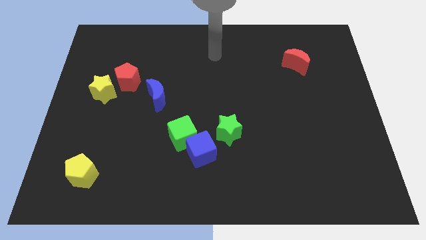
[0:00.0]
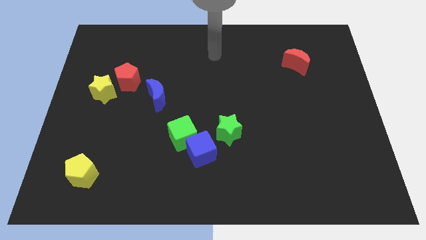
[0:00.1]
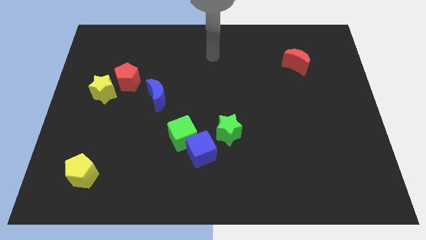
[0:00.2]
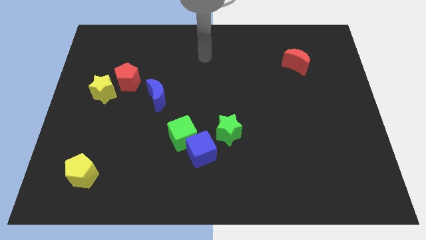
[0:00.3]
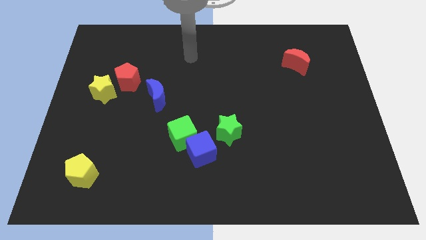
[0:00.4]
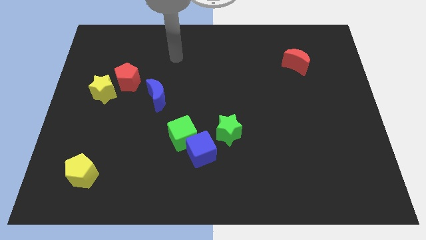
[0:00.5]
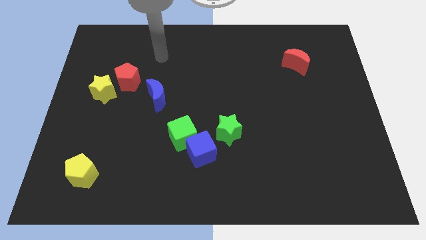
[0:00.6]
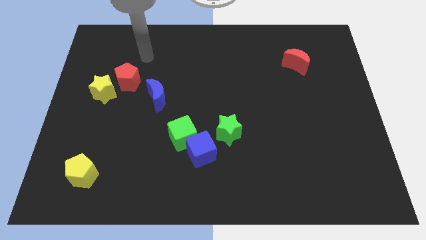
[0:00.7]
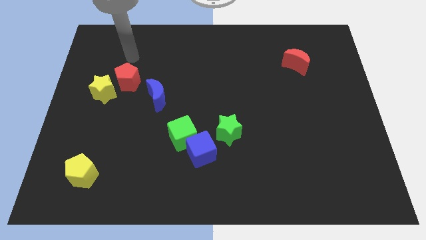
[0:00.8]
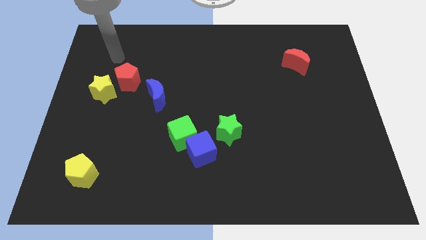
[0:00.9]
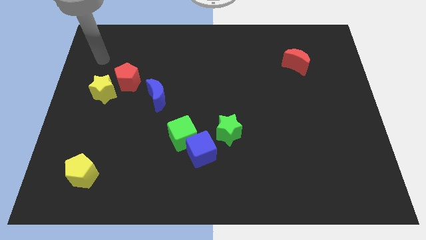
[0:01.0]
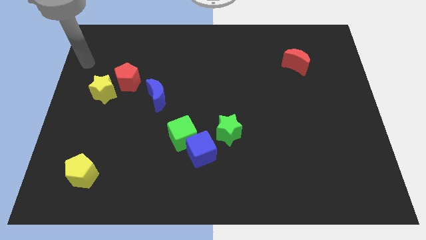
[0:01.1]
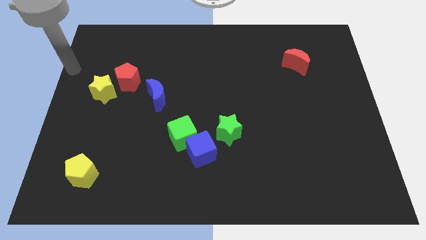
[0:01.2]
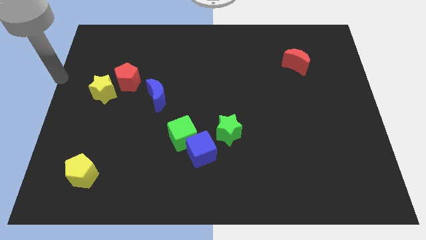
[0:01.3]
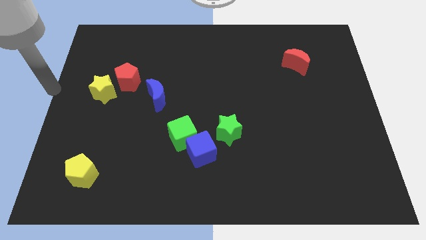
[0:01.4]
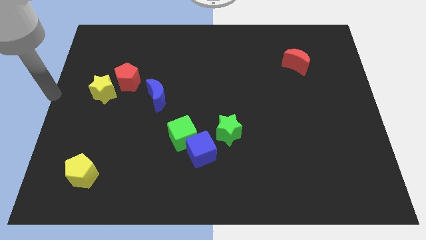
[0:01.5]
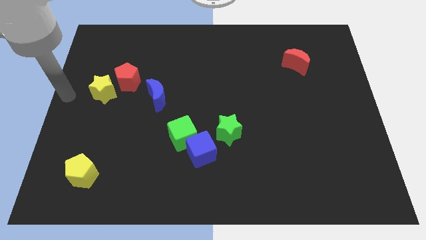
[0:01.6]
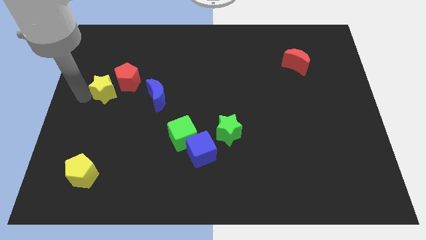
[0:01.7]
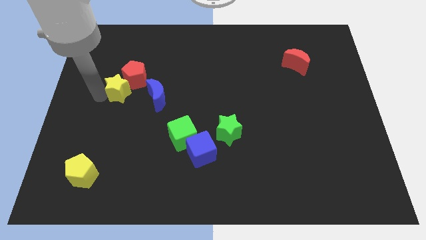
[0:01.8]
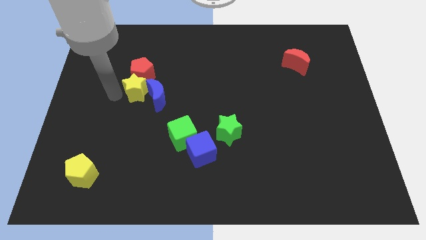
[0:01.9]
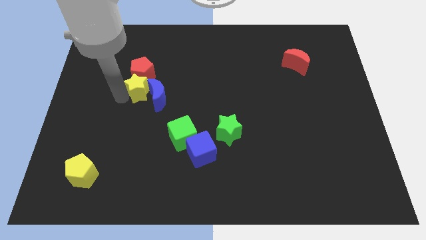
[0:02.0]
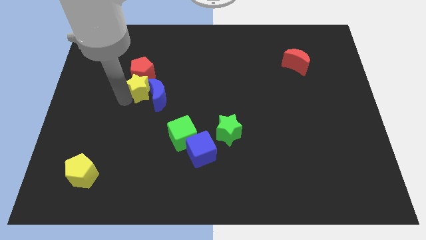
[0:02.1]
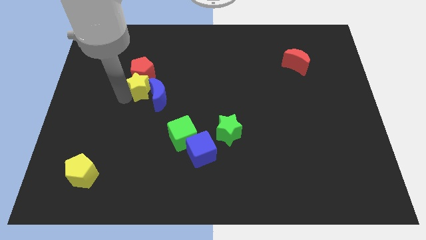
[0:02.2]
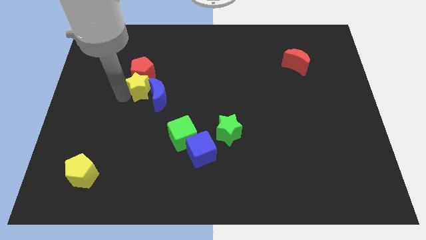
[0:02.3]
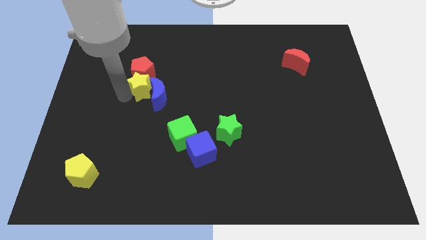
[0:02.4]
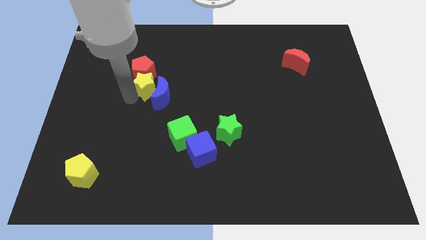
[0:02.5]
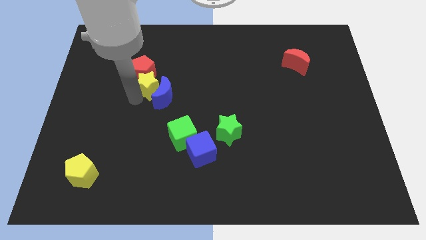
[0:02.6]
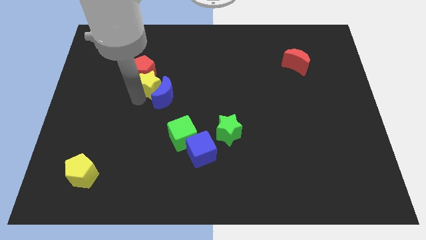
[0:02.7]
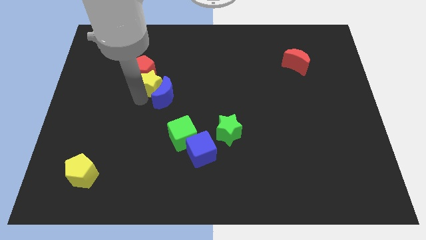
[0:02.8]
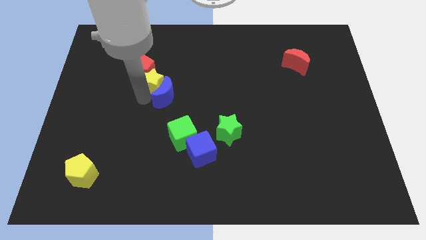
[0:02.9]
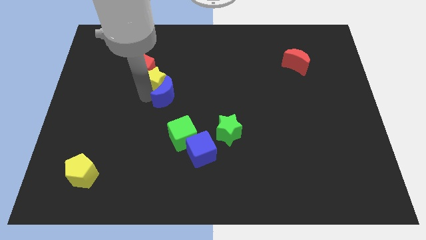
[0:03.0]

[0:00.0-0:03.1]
push the yellow star into the blue crescent

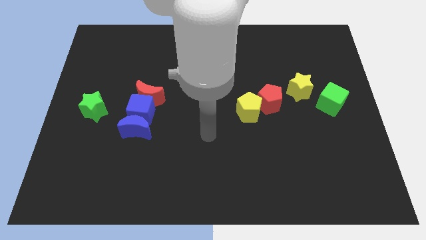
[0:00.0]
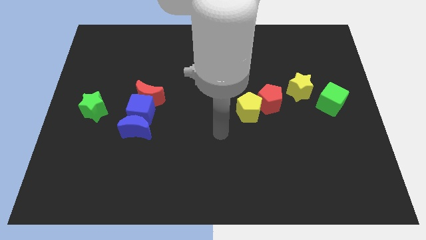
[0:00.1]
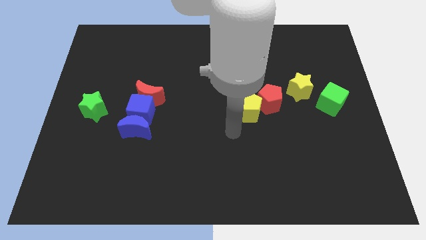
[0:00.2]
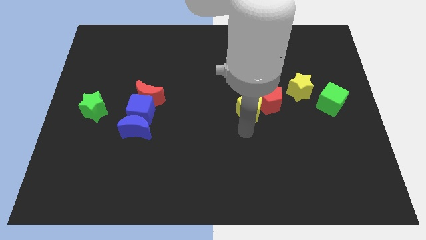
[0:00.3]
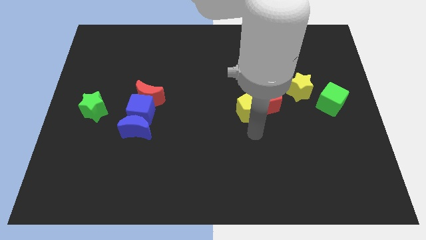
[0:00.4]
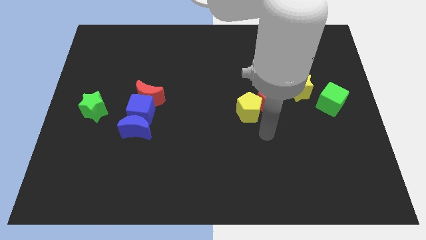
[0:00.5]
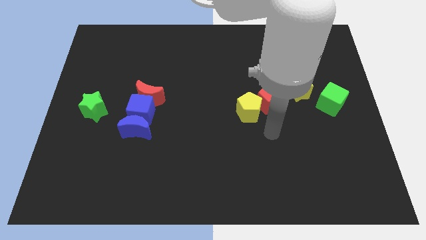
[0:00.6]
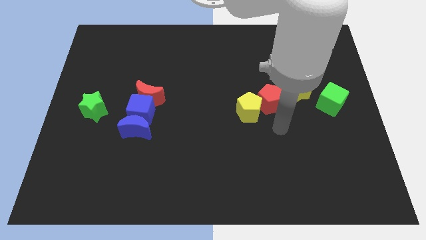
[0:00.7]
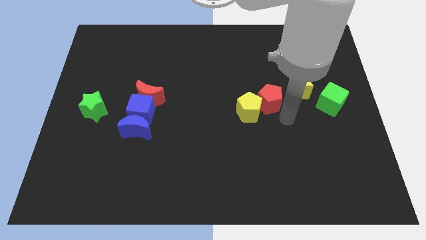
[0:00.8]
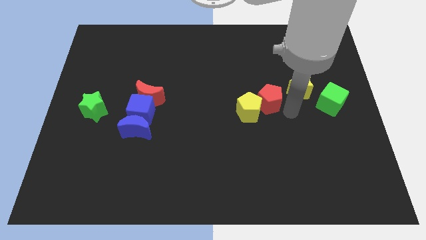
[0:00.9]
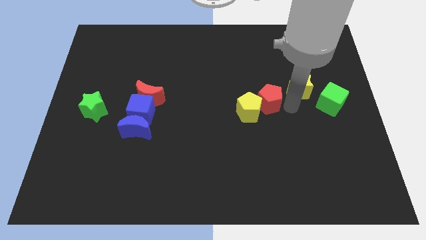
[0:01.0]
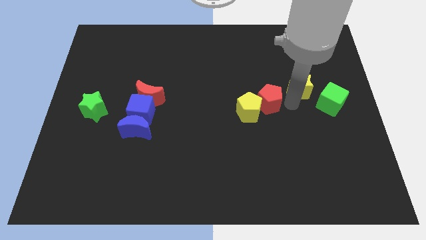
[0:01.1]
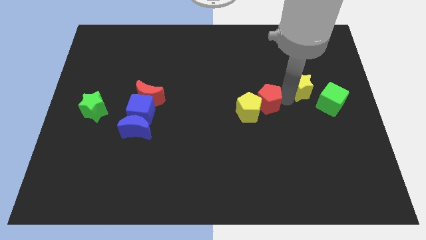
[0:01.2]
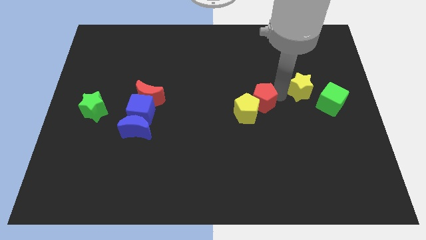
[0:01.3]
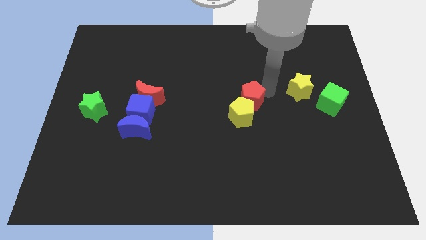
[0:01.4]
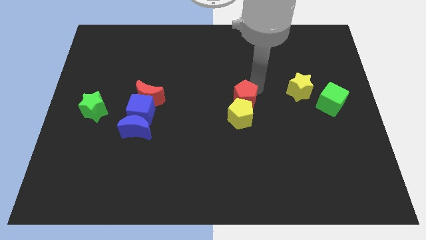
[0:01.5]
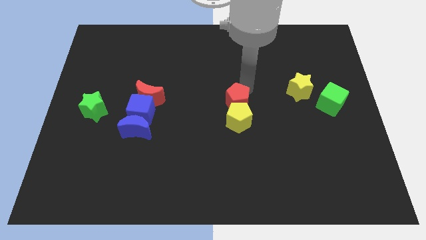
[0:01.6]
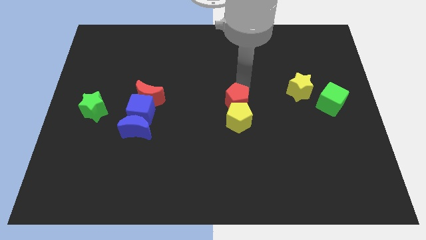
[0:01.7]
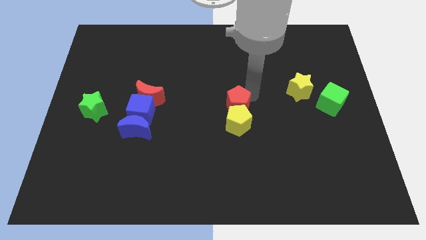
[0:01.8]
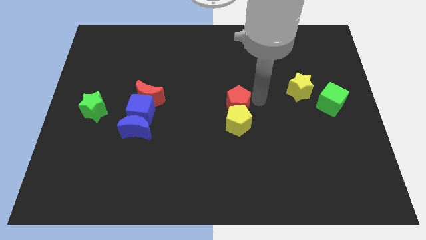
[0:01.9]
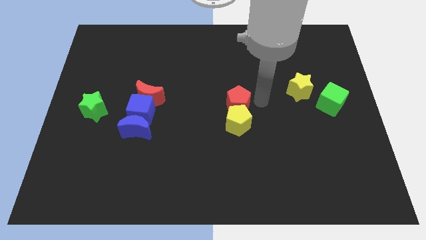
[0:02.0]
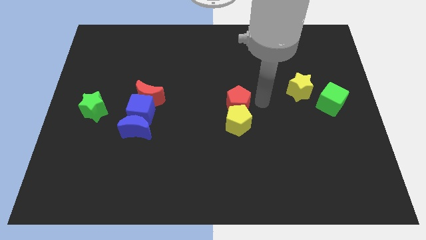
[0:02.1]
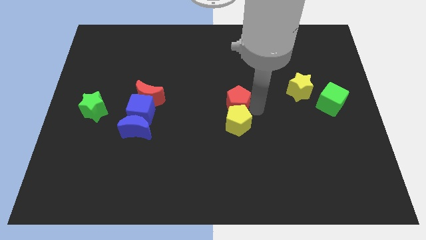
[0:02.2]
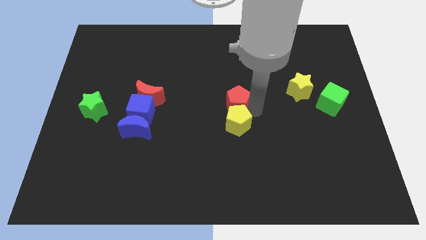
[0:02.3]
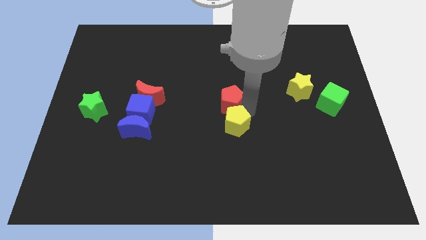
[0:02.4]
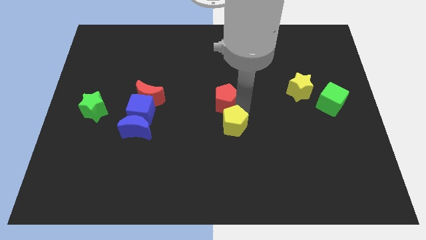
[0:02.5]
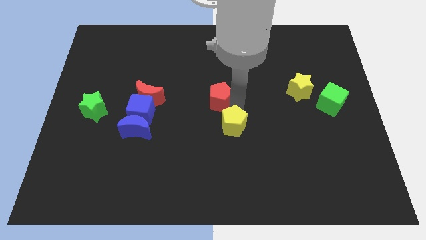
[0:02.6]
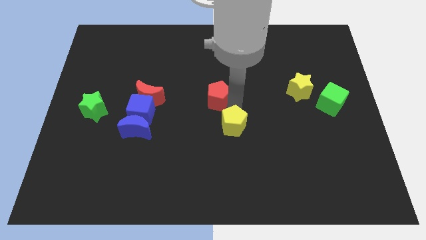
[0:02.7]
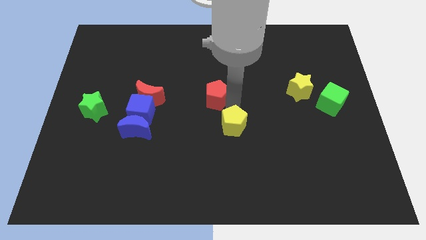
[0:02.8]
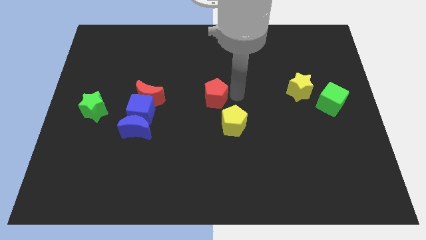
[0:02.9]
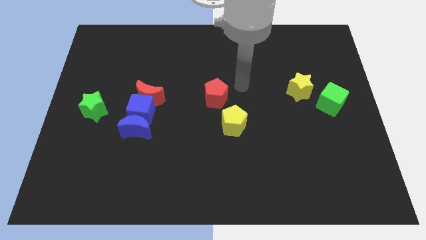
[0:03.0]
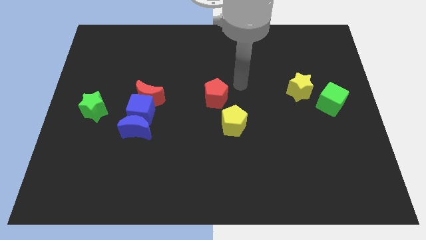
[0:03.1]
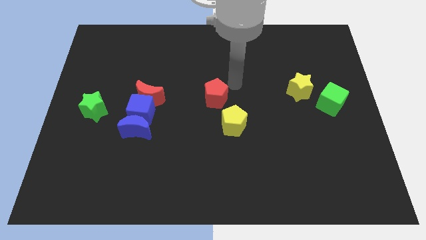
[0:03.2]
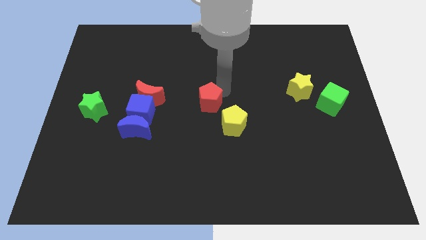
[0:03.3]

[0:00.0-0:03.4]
push the red pentagon parallel to the right of the red crescent

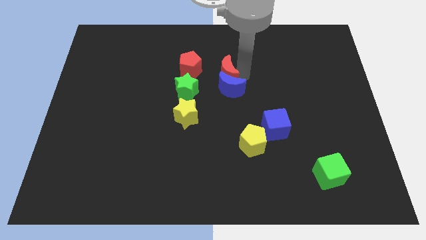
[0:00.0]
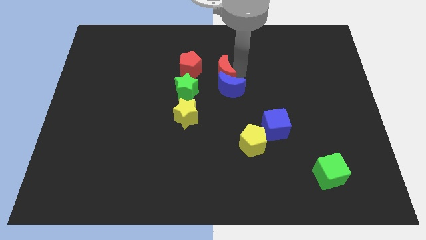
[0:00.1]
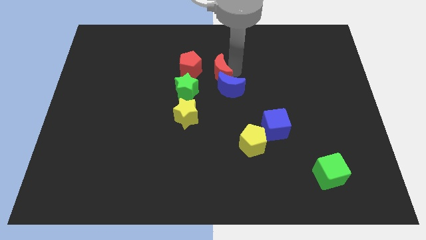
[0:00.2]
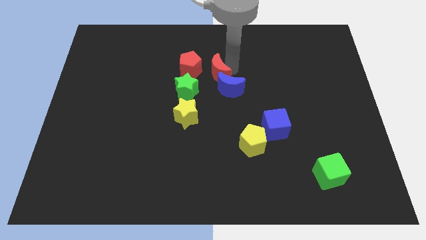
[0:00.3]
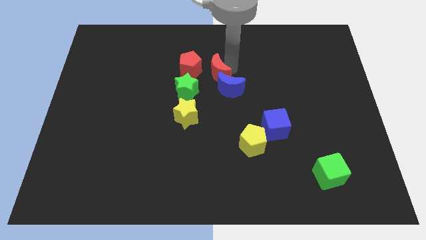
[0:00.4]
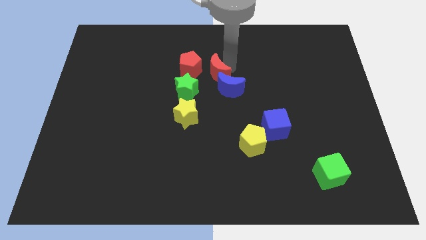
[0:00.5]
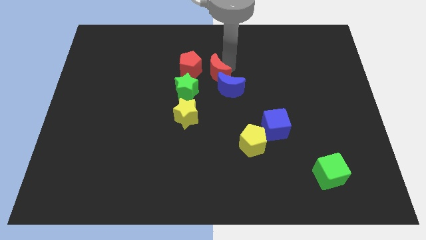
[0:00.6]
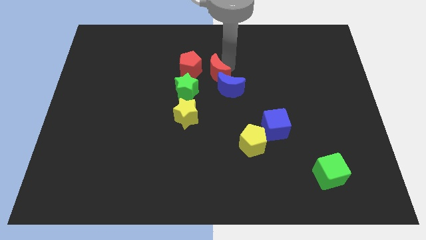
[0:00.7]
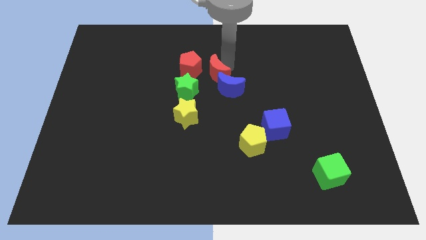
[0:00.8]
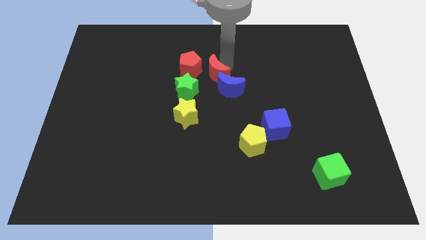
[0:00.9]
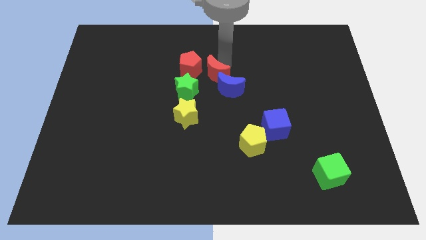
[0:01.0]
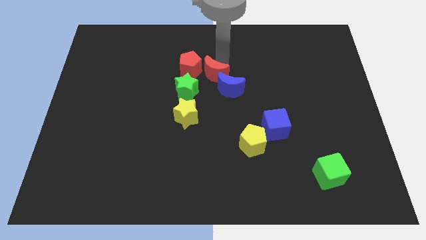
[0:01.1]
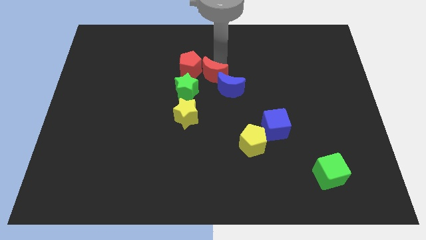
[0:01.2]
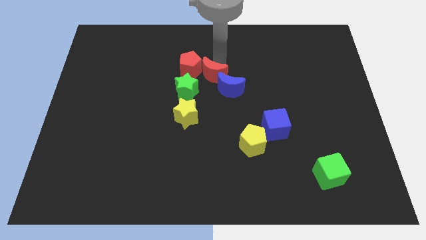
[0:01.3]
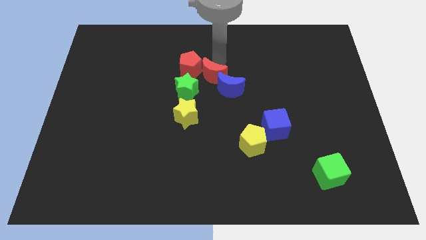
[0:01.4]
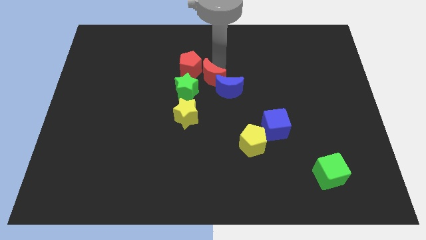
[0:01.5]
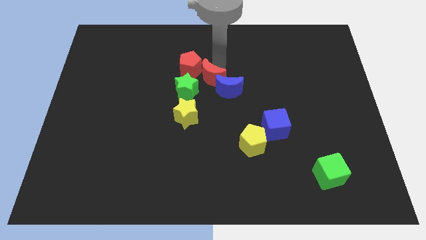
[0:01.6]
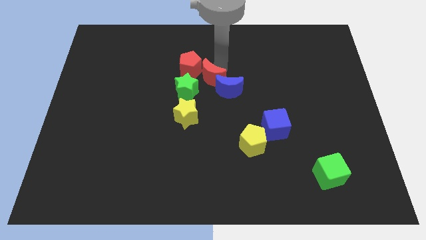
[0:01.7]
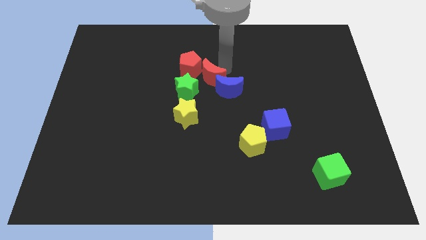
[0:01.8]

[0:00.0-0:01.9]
place the red crescent diagonally in between the blue crescent and the red pentagon

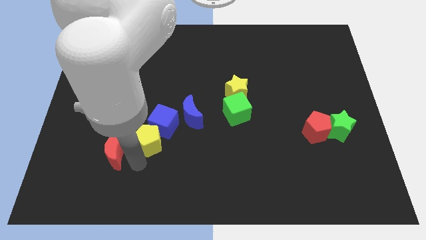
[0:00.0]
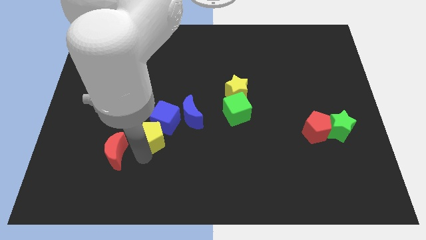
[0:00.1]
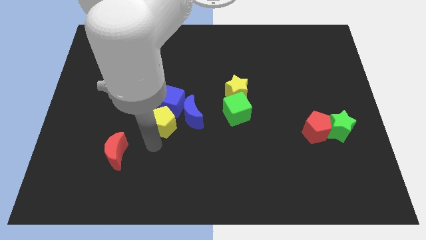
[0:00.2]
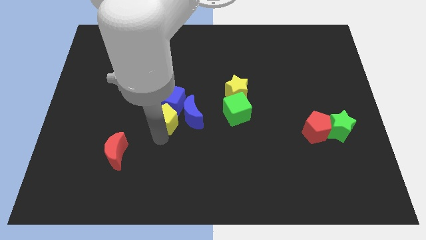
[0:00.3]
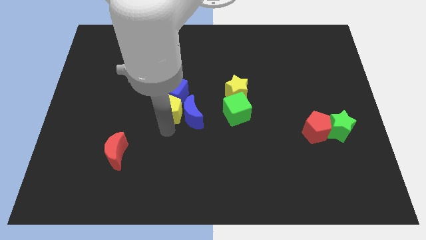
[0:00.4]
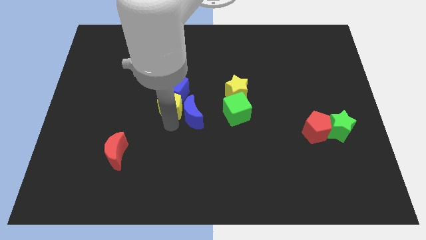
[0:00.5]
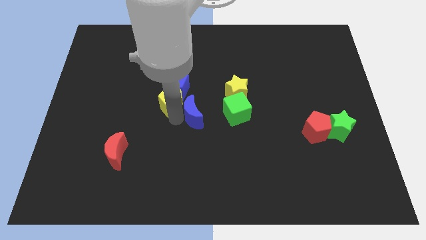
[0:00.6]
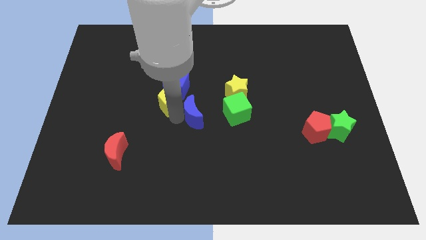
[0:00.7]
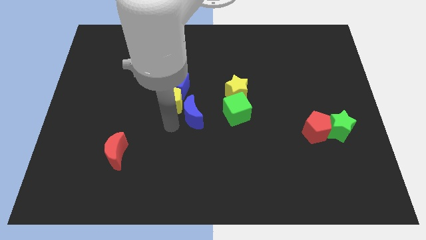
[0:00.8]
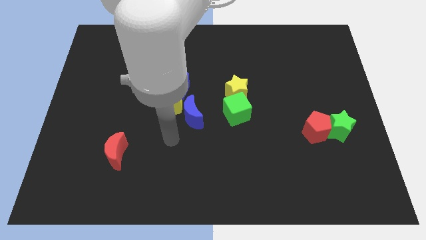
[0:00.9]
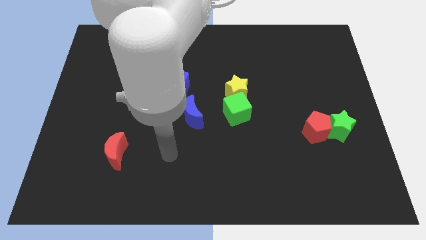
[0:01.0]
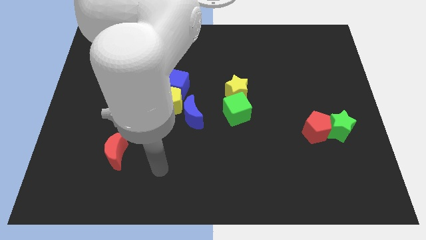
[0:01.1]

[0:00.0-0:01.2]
move yellow pentagon and the blue cube towards top center
